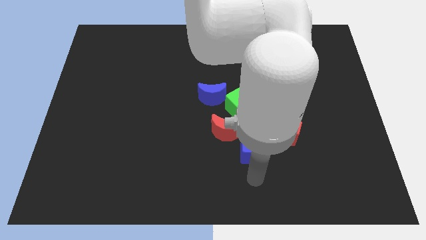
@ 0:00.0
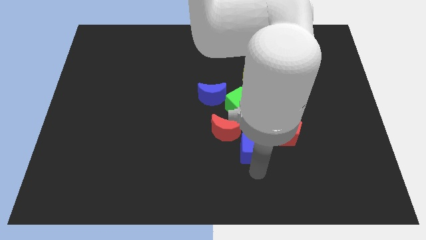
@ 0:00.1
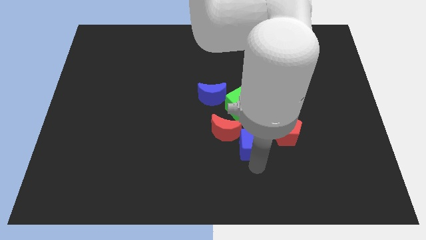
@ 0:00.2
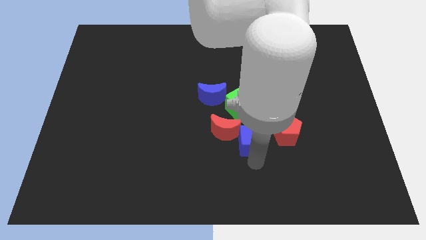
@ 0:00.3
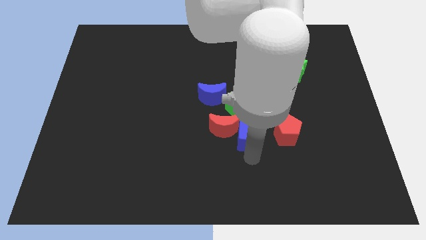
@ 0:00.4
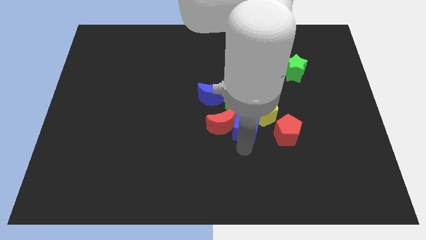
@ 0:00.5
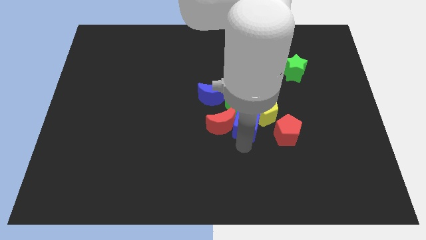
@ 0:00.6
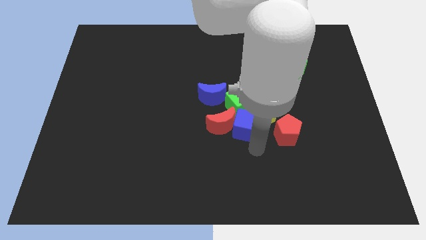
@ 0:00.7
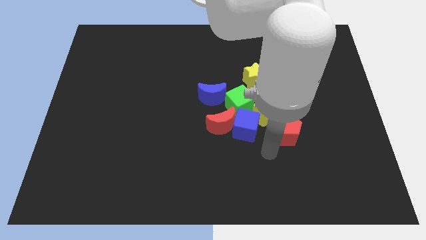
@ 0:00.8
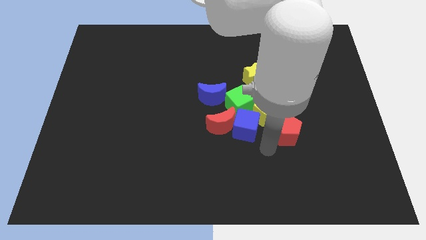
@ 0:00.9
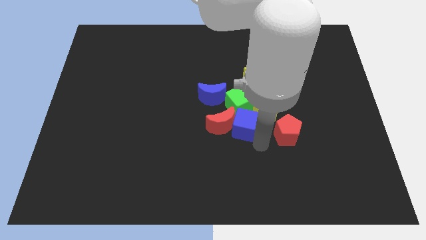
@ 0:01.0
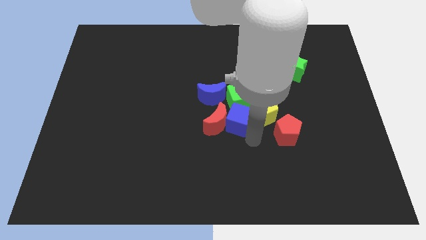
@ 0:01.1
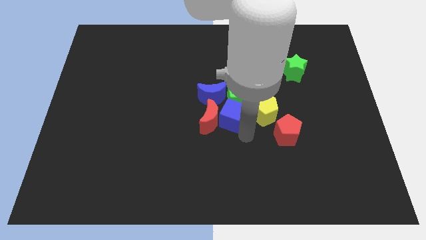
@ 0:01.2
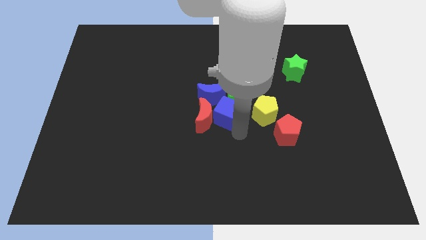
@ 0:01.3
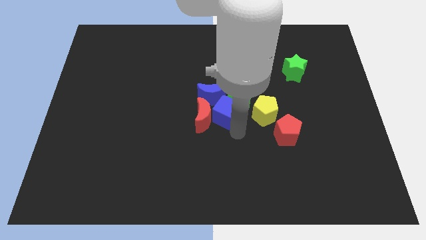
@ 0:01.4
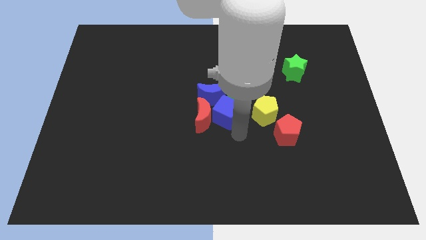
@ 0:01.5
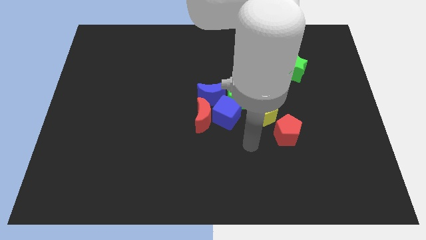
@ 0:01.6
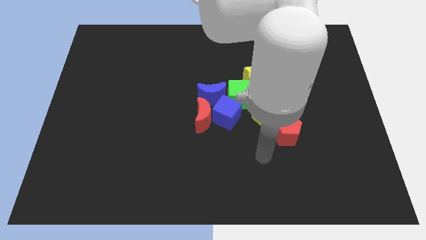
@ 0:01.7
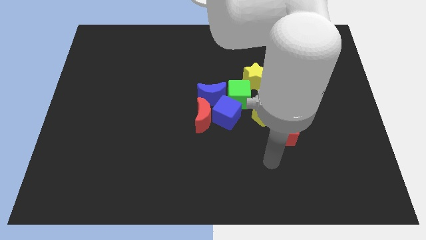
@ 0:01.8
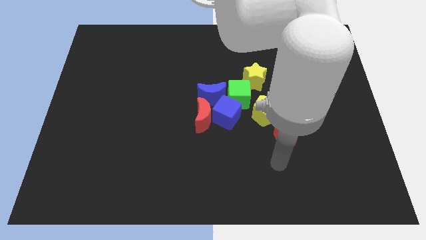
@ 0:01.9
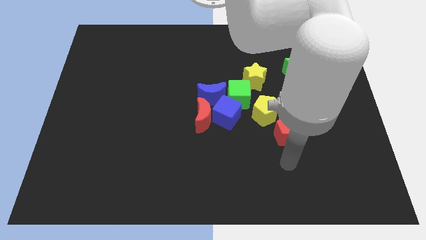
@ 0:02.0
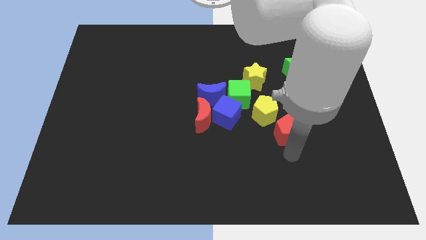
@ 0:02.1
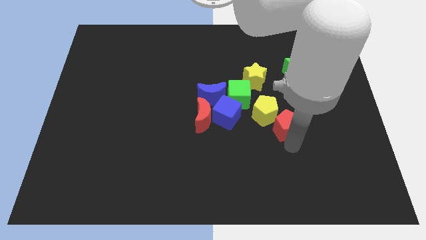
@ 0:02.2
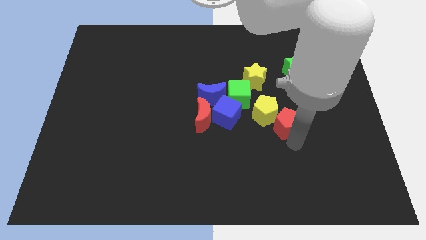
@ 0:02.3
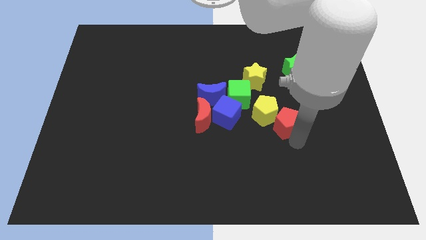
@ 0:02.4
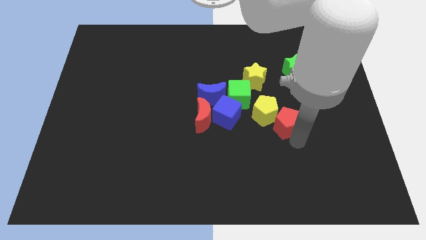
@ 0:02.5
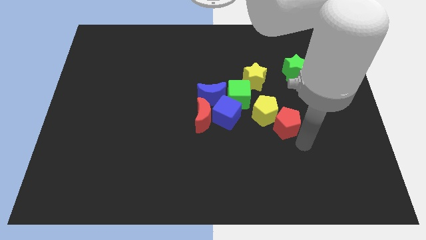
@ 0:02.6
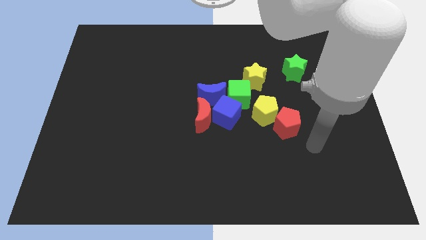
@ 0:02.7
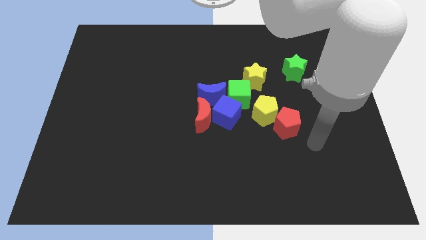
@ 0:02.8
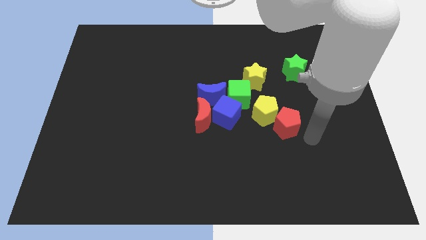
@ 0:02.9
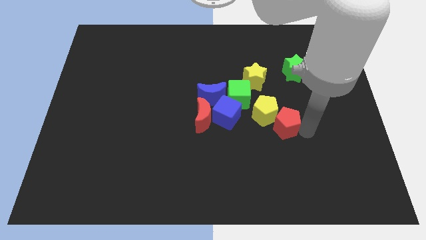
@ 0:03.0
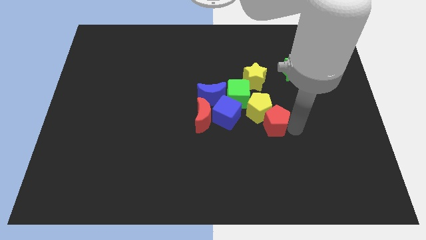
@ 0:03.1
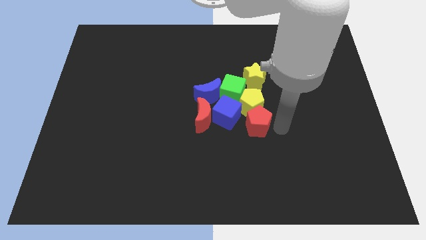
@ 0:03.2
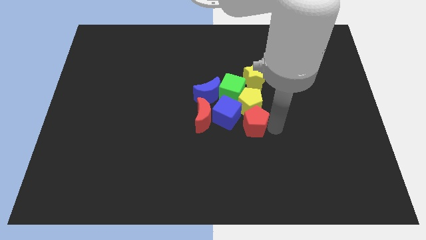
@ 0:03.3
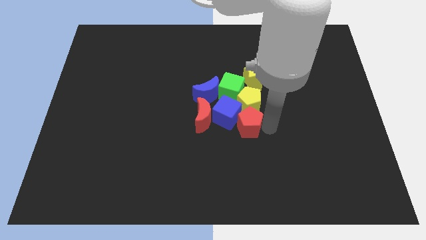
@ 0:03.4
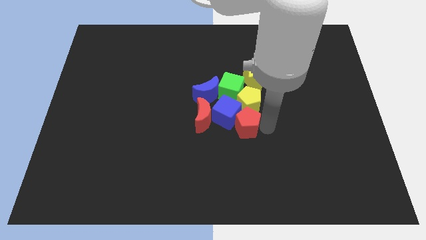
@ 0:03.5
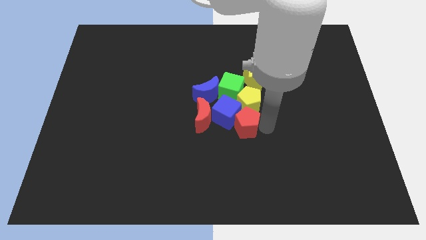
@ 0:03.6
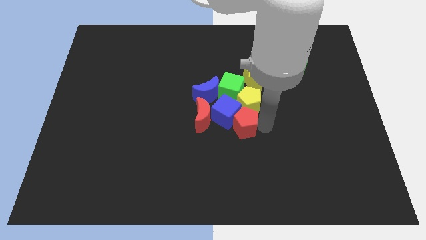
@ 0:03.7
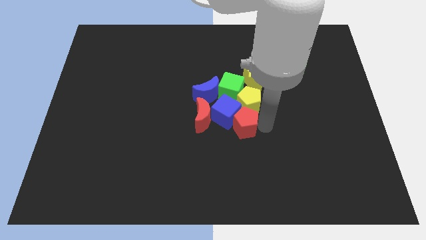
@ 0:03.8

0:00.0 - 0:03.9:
push the blue cube and red pentagon into the group of blocks

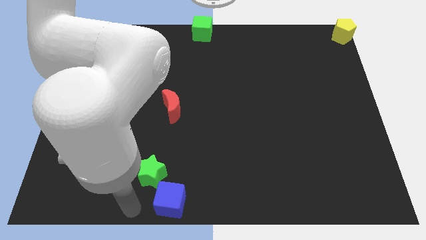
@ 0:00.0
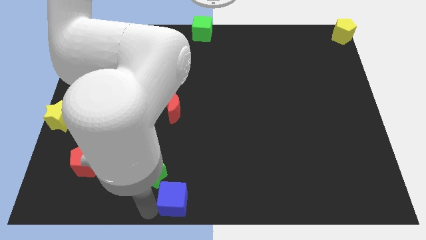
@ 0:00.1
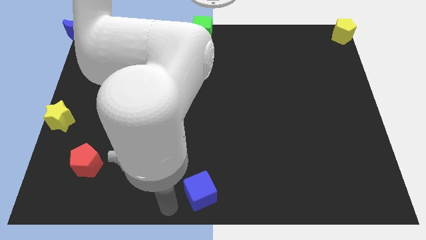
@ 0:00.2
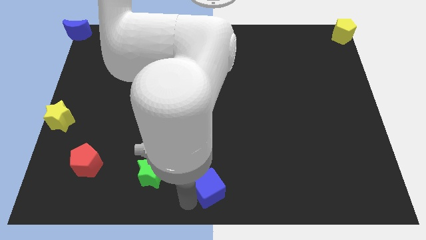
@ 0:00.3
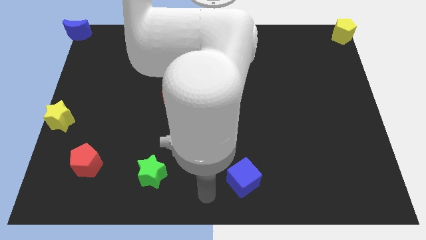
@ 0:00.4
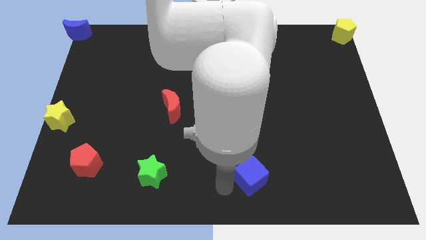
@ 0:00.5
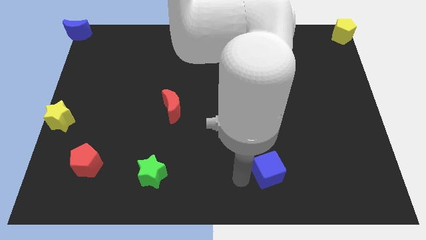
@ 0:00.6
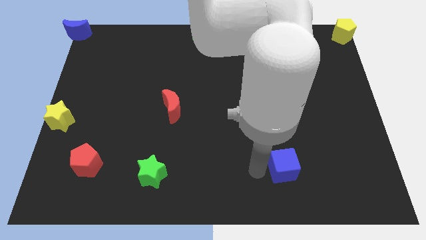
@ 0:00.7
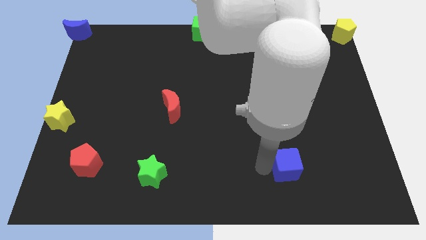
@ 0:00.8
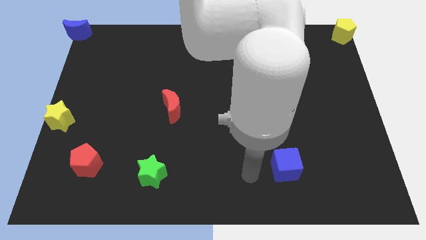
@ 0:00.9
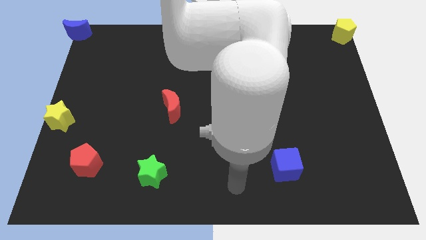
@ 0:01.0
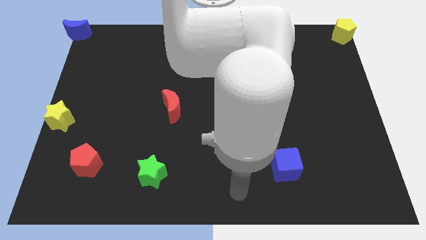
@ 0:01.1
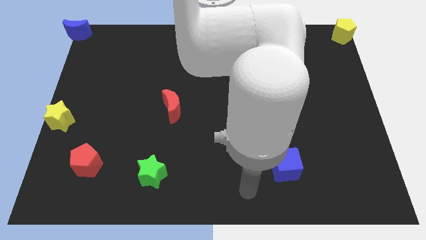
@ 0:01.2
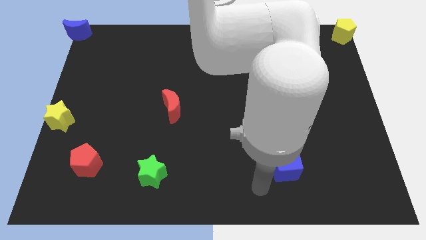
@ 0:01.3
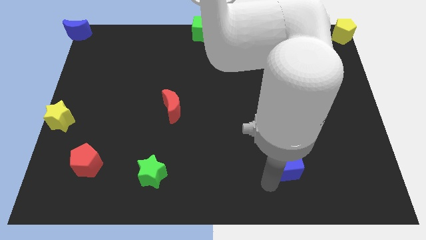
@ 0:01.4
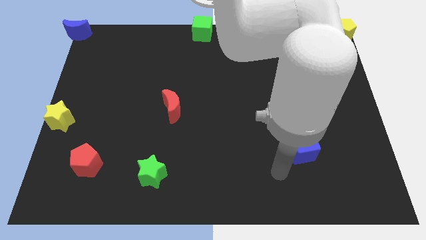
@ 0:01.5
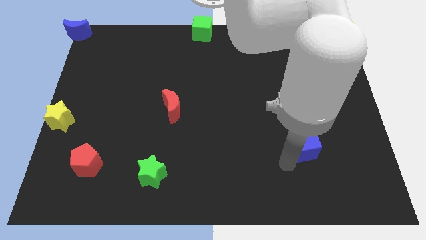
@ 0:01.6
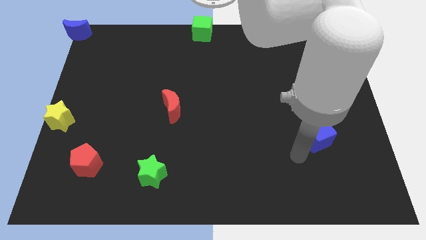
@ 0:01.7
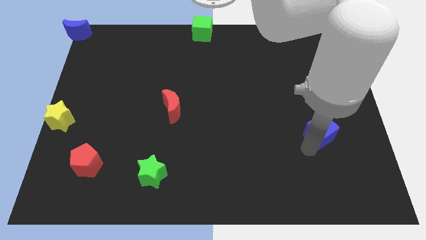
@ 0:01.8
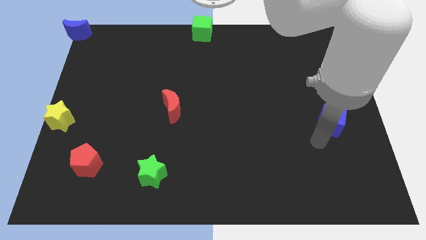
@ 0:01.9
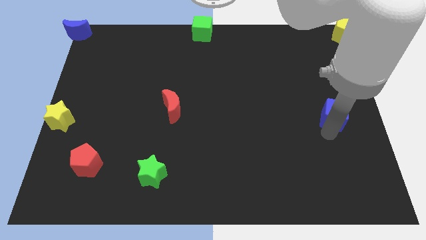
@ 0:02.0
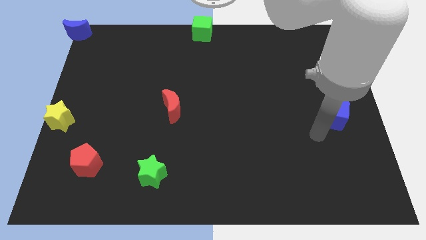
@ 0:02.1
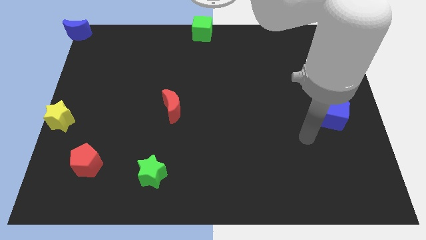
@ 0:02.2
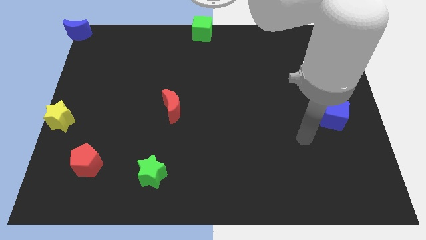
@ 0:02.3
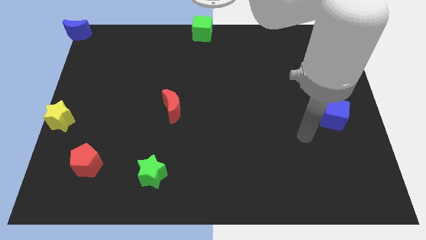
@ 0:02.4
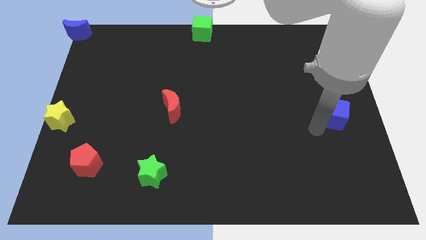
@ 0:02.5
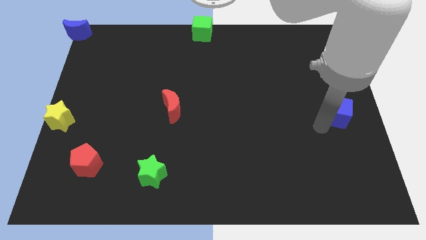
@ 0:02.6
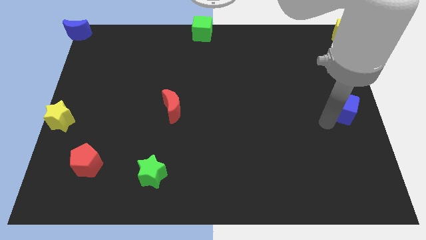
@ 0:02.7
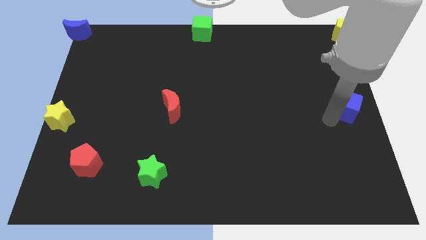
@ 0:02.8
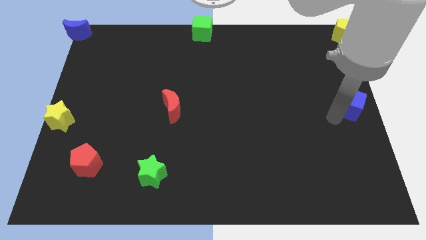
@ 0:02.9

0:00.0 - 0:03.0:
move the blue cube to the center right of the board

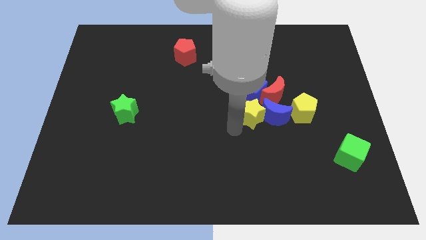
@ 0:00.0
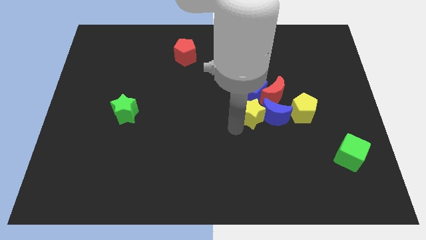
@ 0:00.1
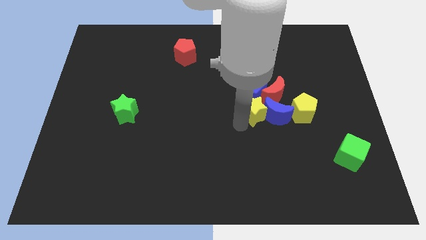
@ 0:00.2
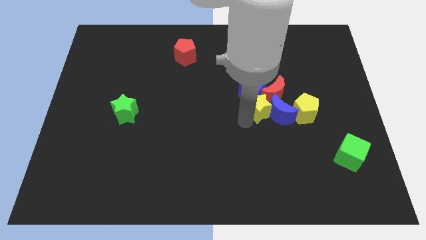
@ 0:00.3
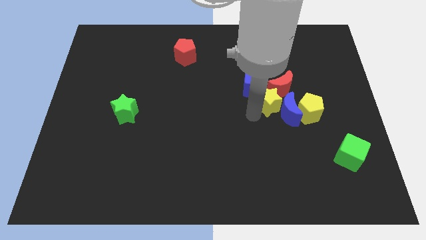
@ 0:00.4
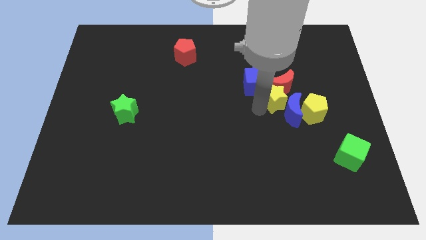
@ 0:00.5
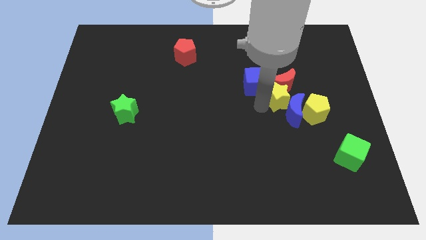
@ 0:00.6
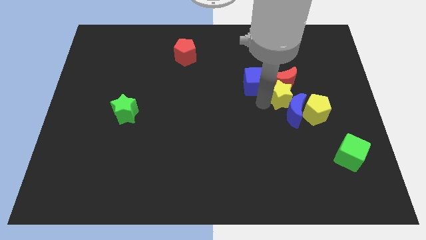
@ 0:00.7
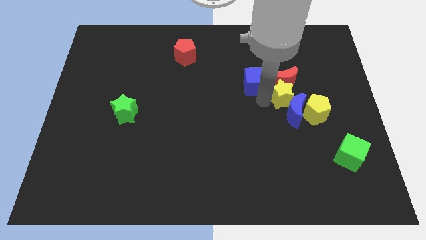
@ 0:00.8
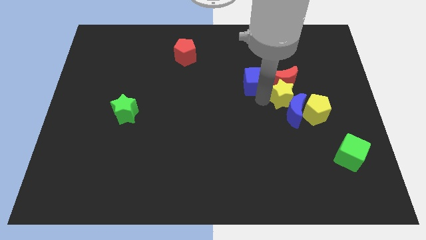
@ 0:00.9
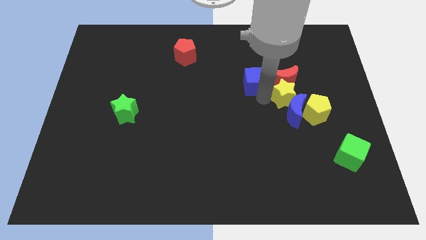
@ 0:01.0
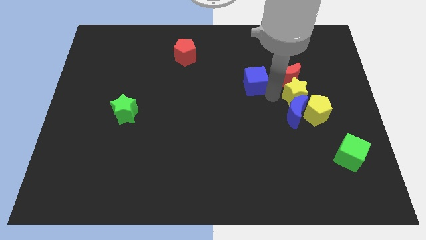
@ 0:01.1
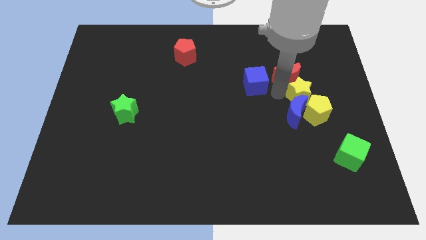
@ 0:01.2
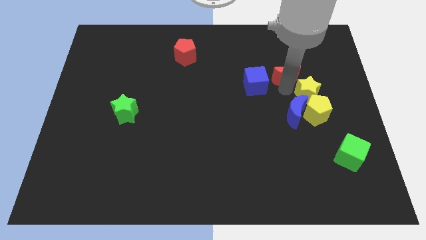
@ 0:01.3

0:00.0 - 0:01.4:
slightly push red moon

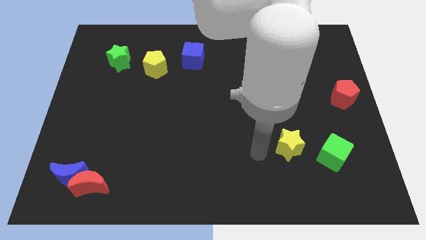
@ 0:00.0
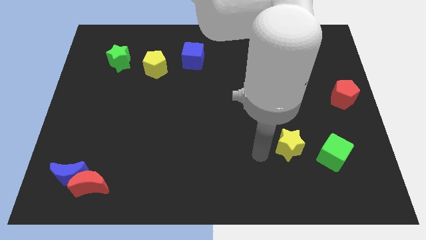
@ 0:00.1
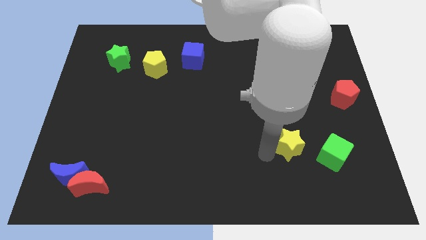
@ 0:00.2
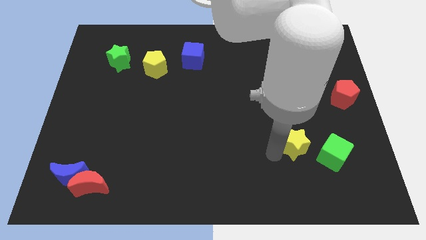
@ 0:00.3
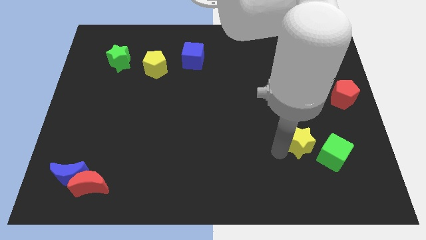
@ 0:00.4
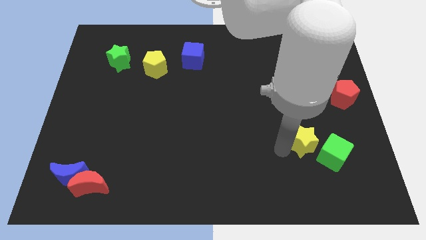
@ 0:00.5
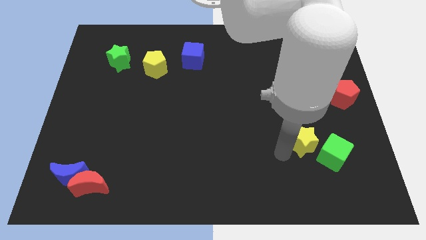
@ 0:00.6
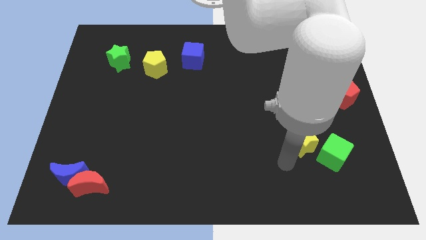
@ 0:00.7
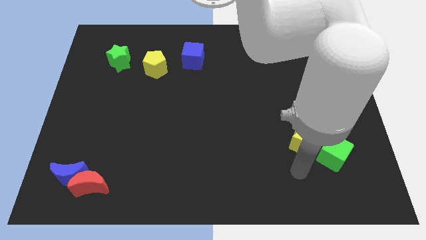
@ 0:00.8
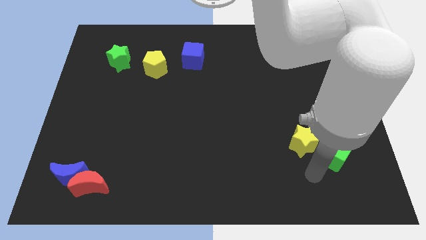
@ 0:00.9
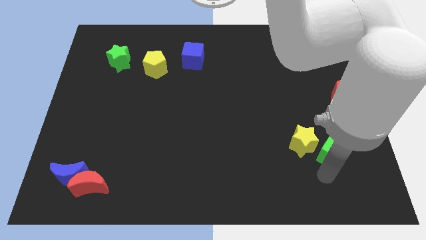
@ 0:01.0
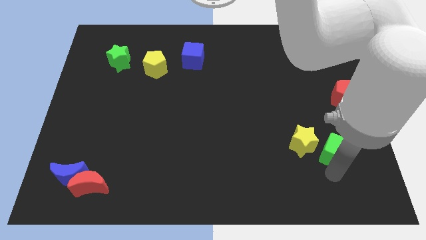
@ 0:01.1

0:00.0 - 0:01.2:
move yellow star towards green cube
